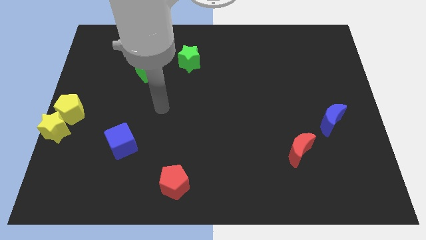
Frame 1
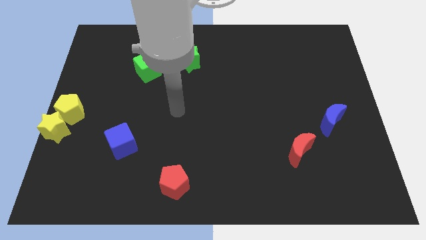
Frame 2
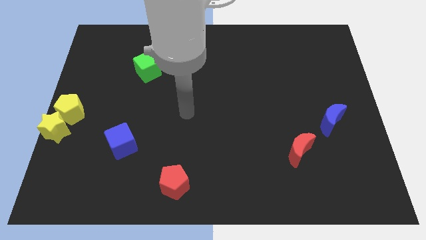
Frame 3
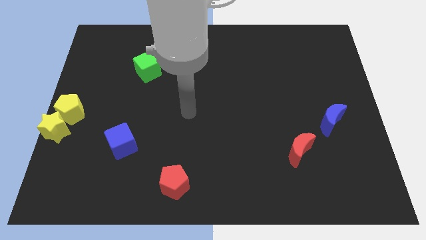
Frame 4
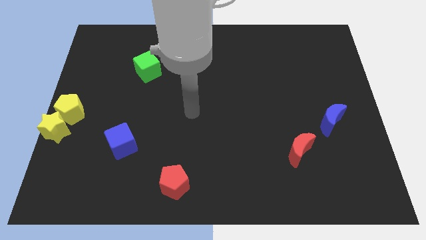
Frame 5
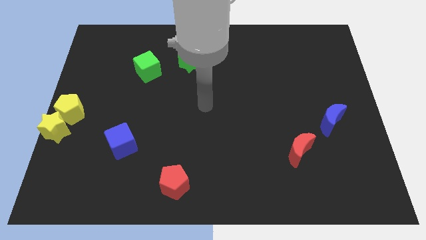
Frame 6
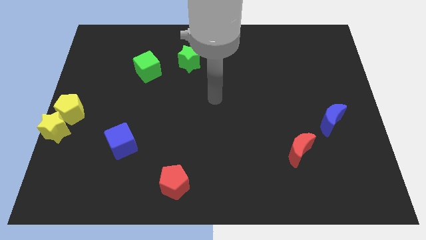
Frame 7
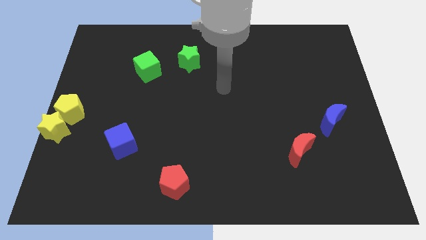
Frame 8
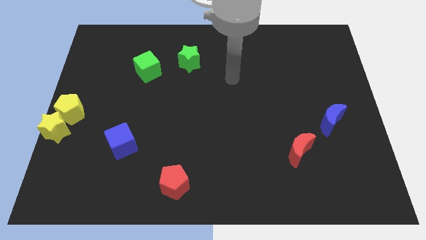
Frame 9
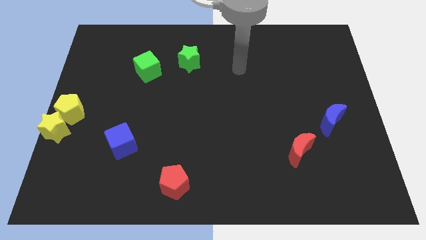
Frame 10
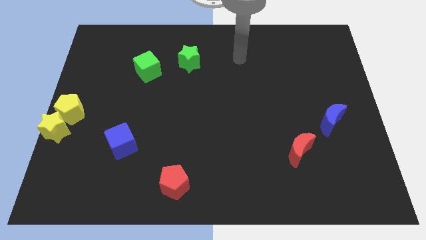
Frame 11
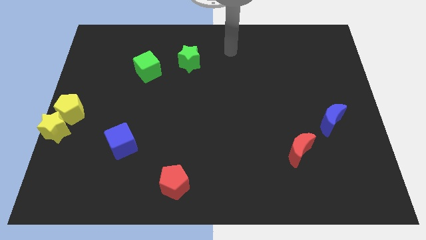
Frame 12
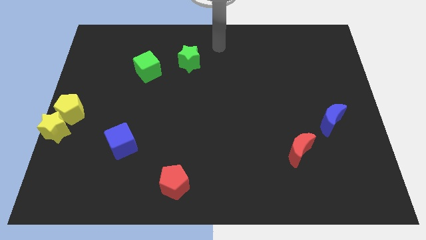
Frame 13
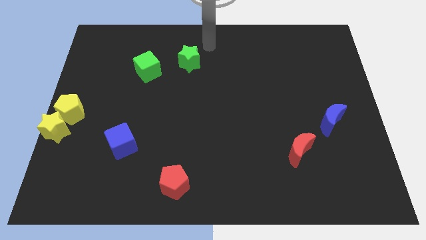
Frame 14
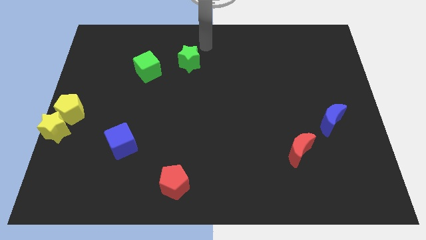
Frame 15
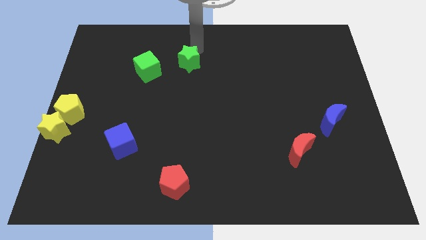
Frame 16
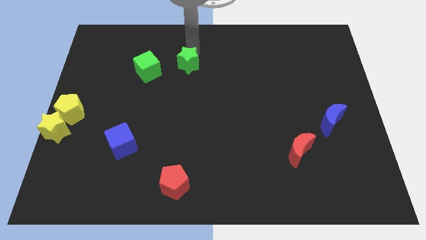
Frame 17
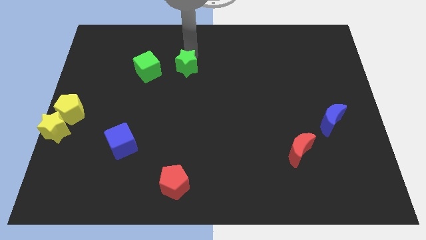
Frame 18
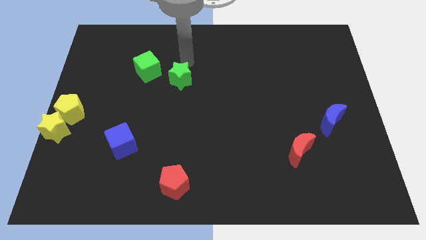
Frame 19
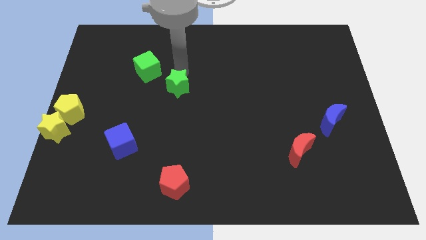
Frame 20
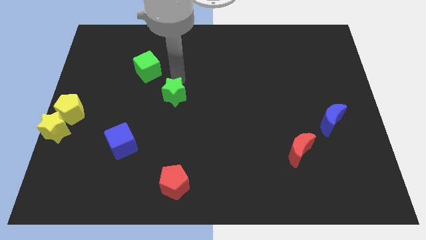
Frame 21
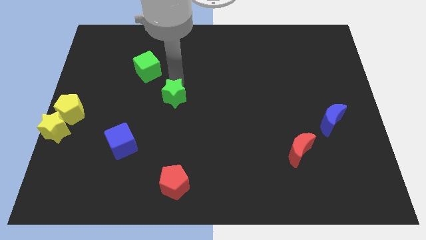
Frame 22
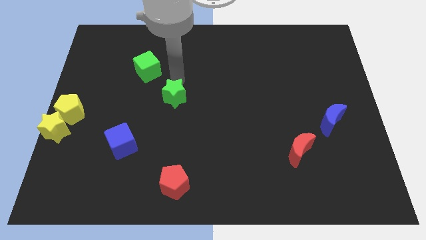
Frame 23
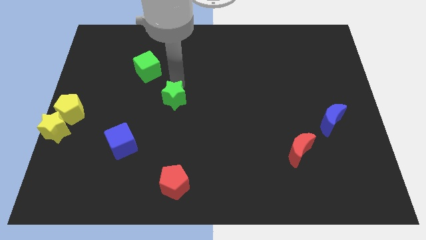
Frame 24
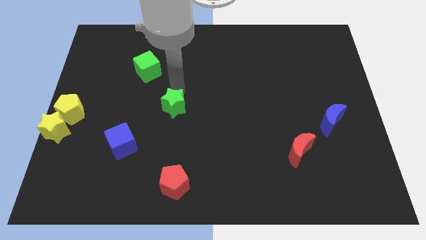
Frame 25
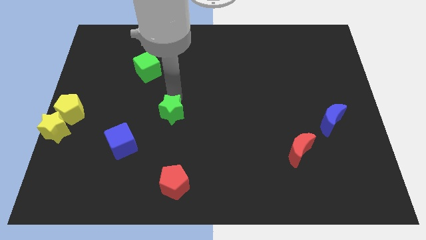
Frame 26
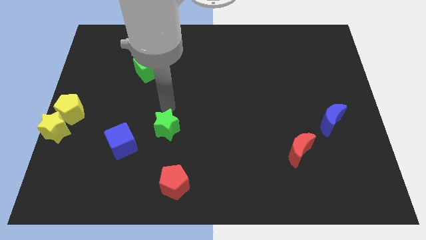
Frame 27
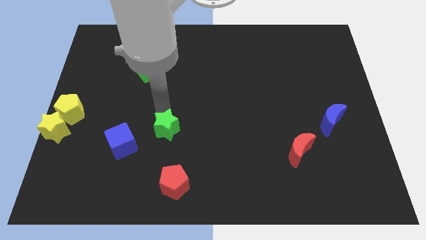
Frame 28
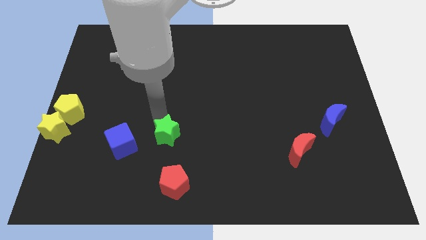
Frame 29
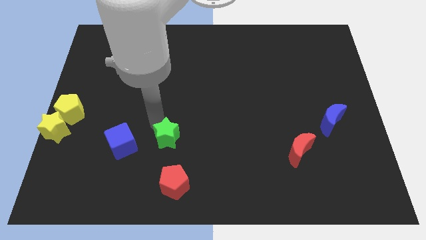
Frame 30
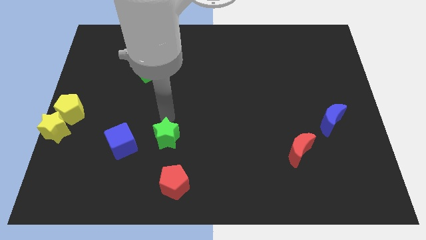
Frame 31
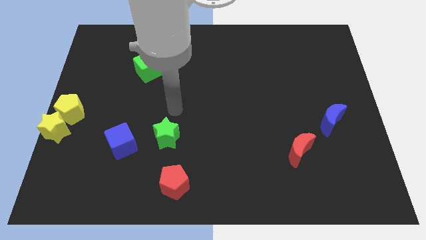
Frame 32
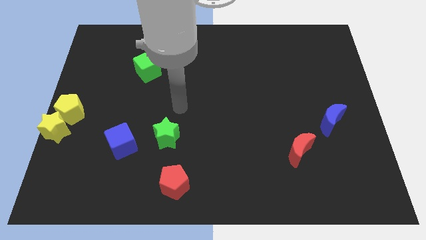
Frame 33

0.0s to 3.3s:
push the green star to the top side of the red pentagon

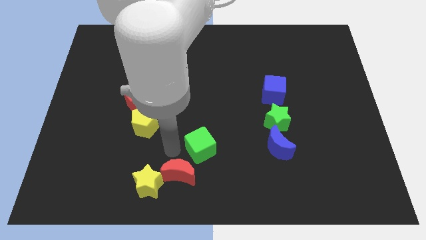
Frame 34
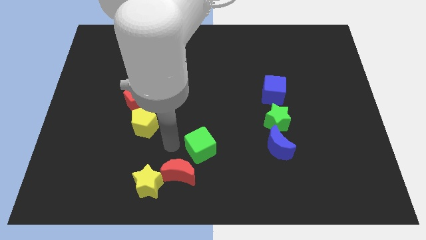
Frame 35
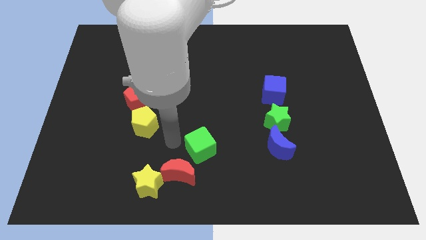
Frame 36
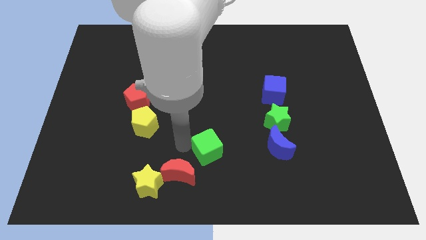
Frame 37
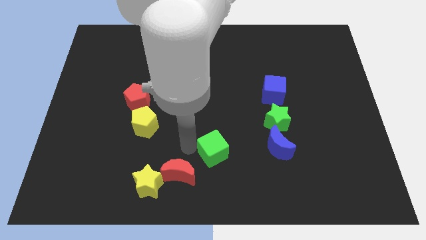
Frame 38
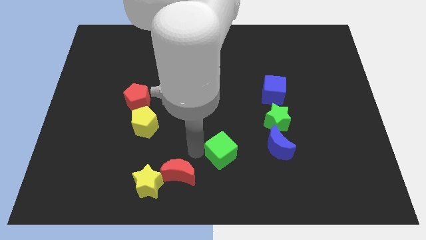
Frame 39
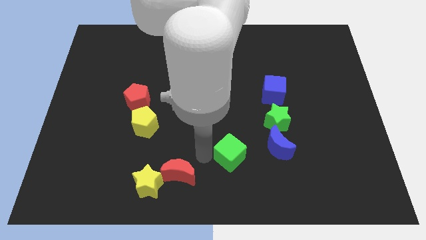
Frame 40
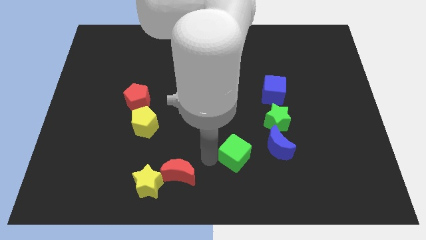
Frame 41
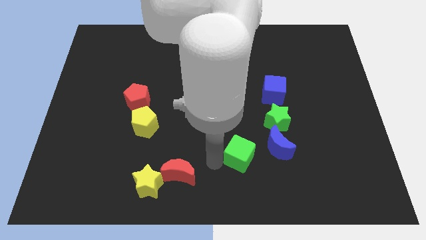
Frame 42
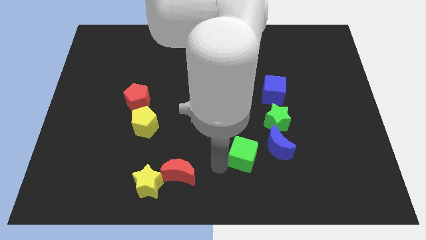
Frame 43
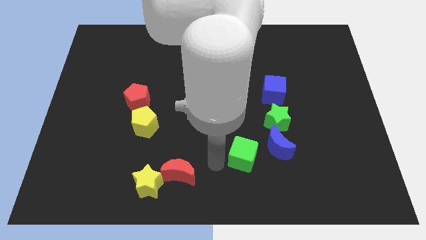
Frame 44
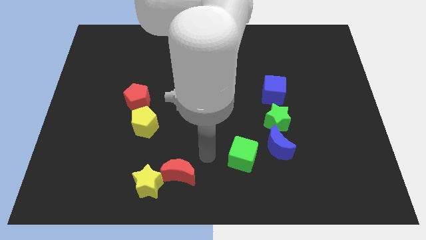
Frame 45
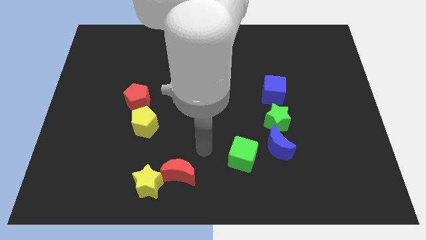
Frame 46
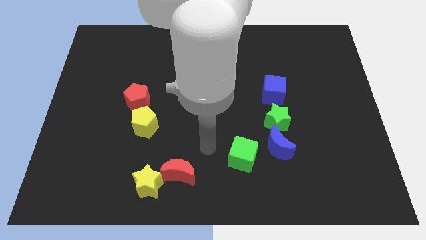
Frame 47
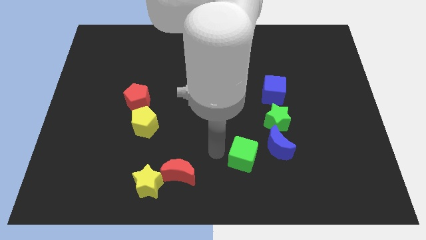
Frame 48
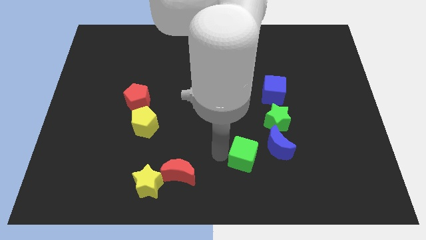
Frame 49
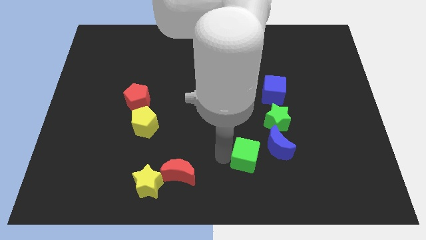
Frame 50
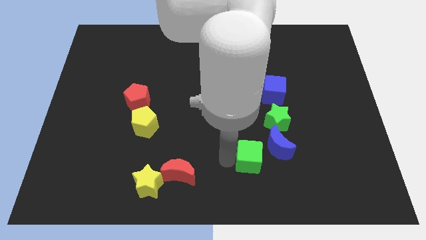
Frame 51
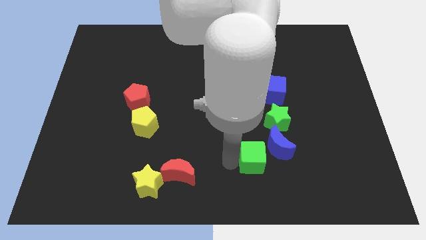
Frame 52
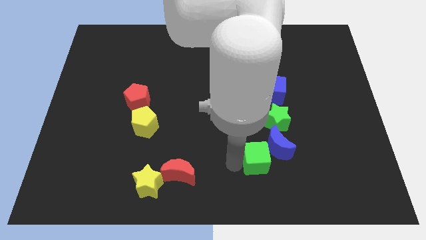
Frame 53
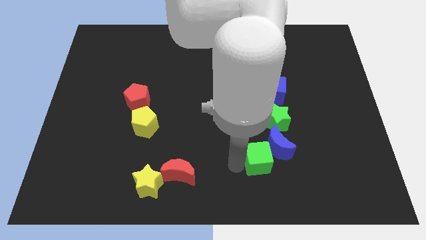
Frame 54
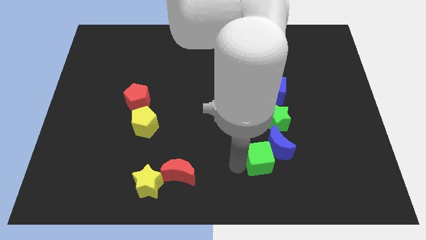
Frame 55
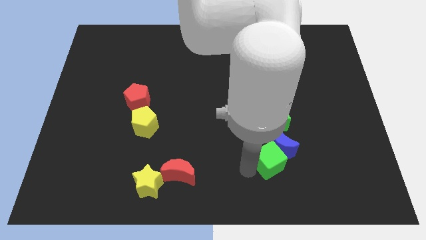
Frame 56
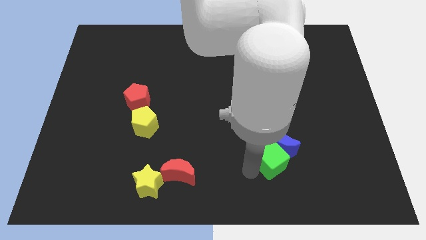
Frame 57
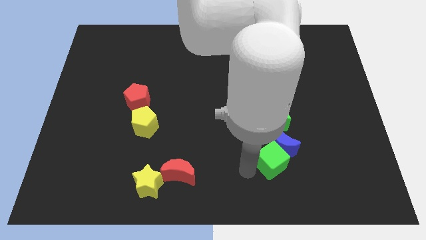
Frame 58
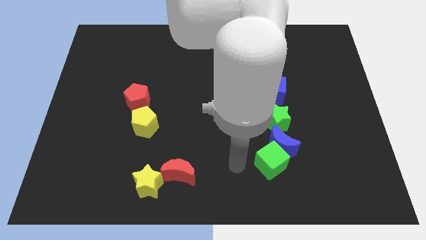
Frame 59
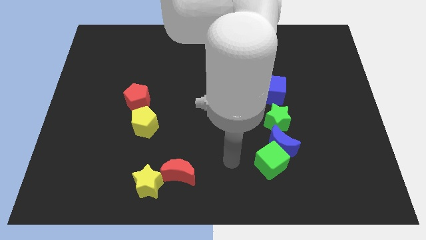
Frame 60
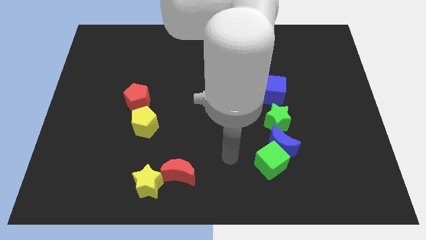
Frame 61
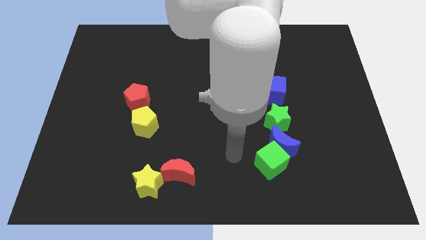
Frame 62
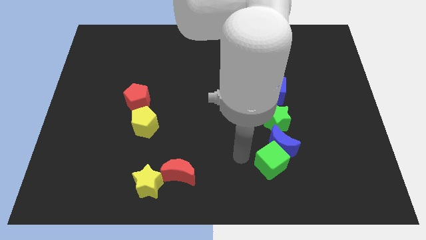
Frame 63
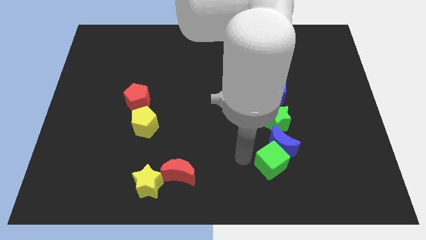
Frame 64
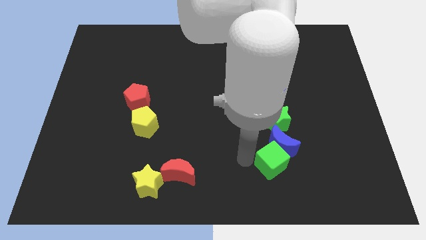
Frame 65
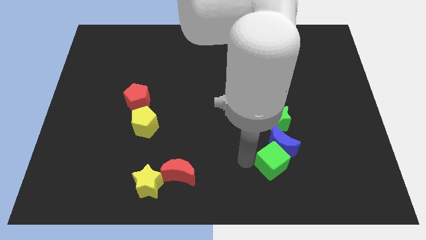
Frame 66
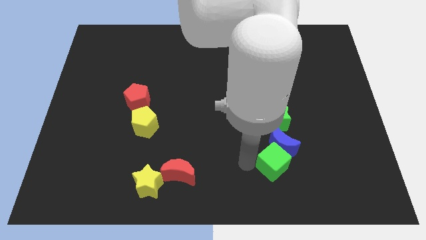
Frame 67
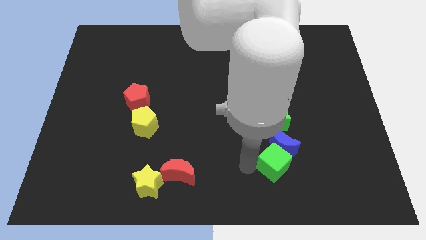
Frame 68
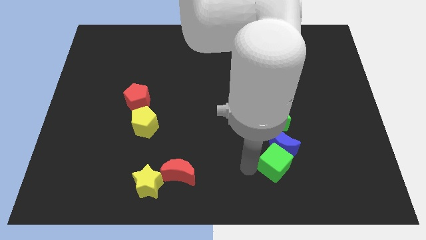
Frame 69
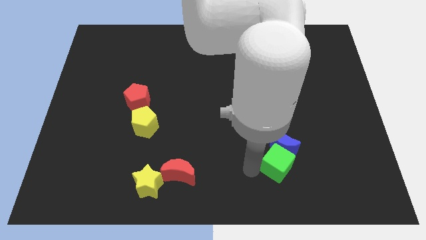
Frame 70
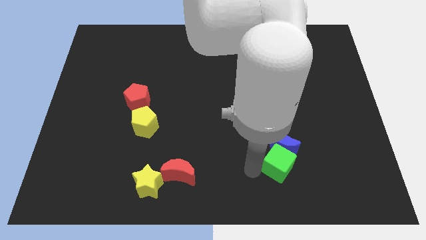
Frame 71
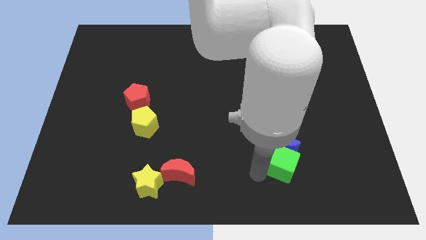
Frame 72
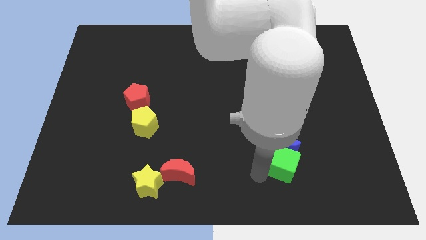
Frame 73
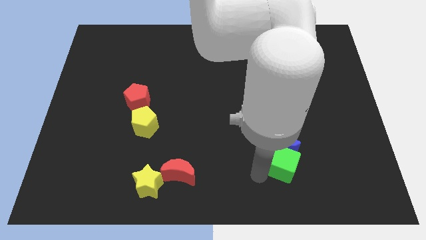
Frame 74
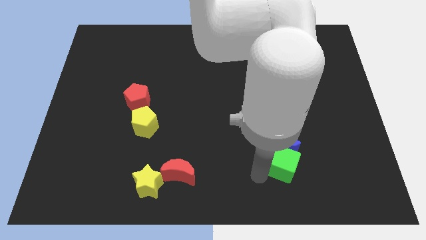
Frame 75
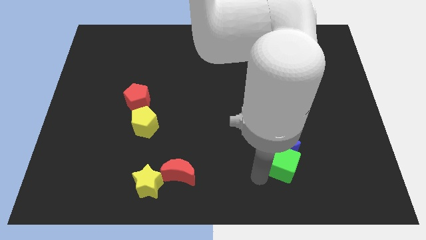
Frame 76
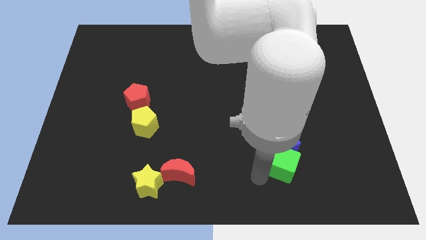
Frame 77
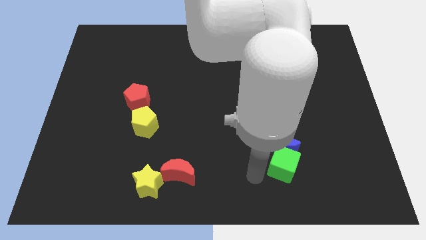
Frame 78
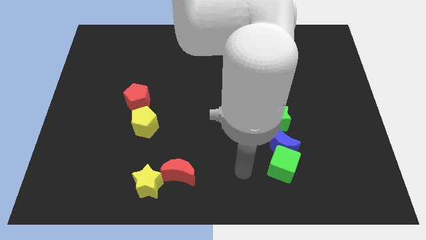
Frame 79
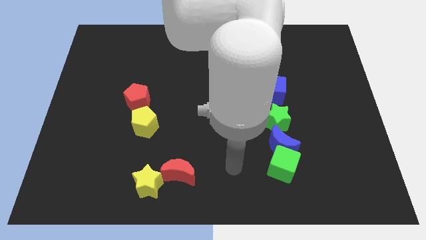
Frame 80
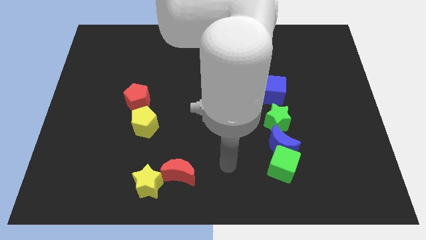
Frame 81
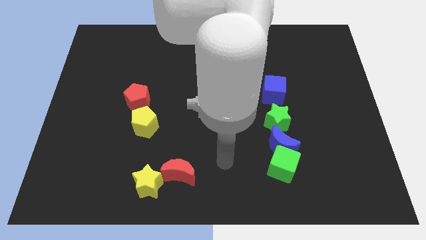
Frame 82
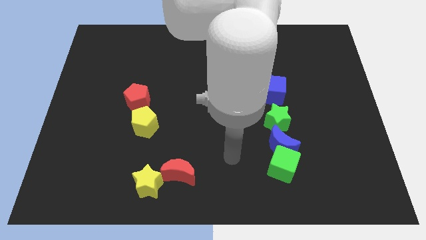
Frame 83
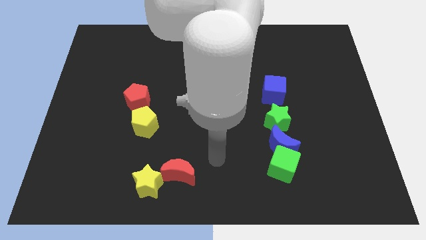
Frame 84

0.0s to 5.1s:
move the green cube into the blue moon

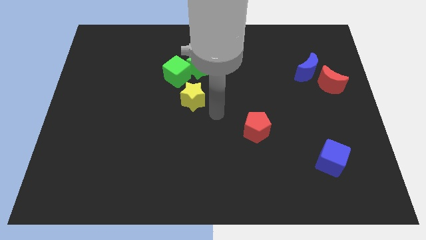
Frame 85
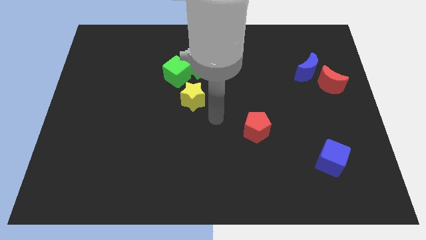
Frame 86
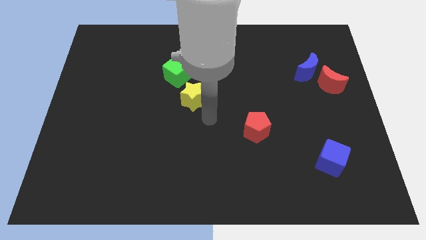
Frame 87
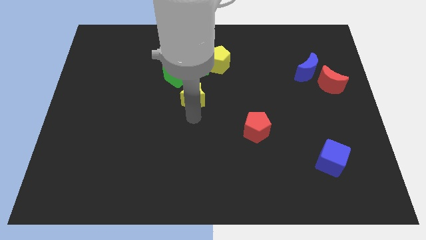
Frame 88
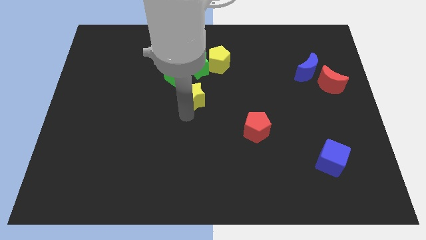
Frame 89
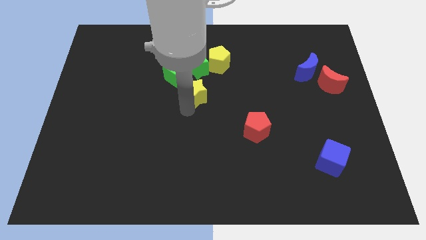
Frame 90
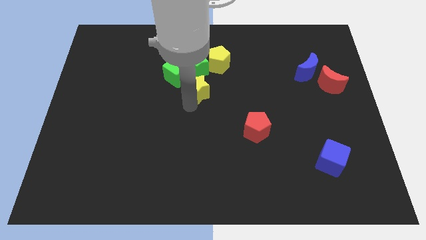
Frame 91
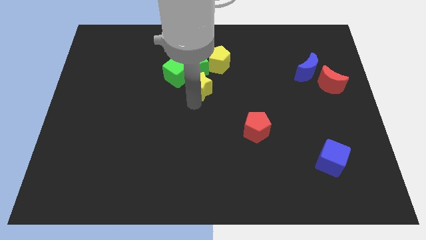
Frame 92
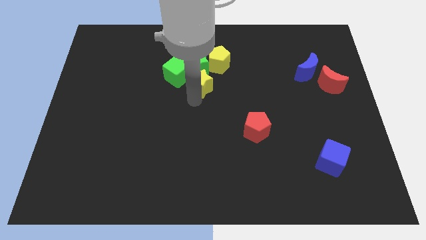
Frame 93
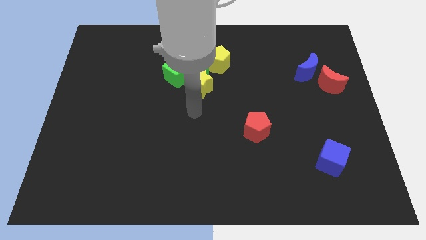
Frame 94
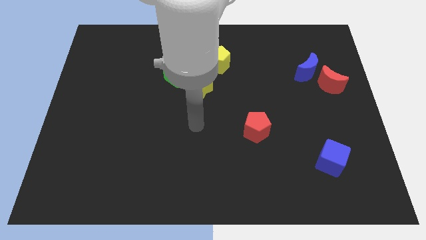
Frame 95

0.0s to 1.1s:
push yellow star into the bottom of the green star
